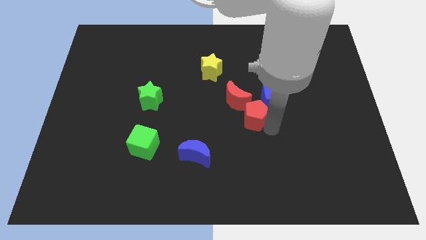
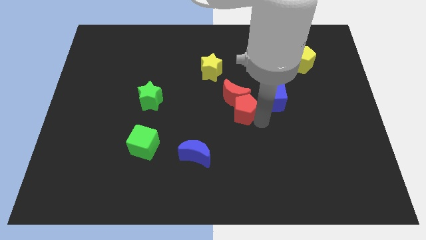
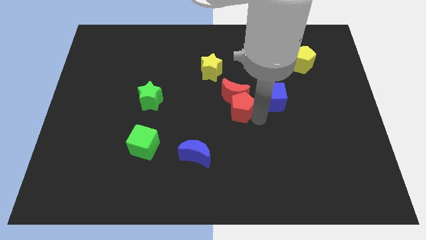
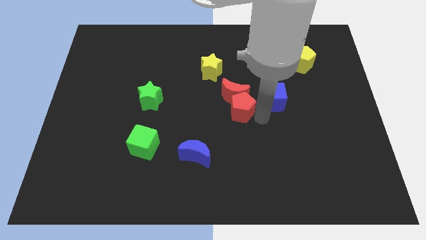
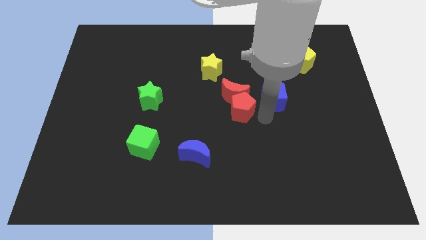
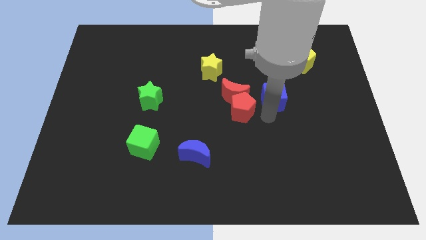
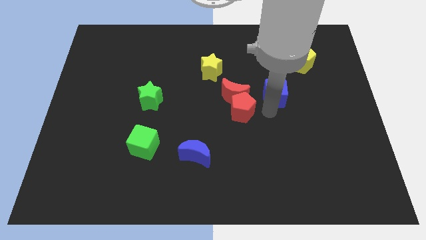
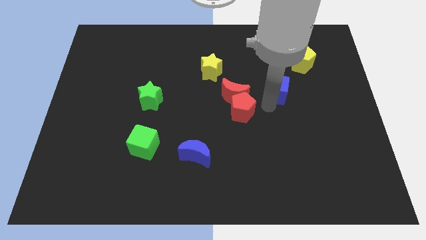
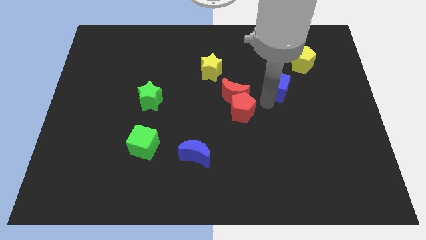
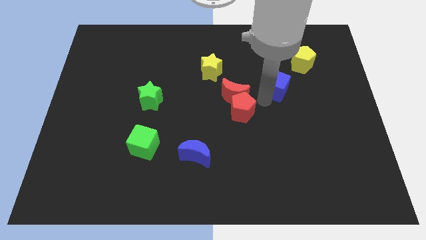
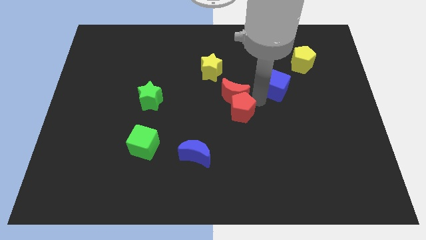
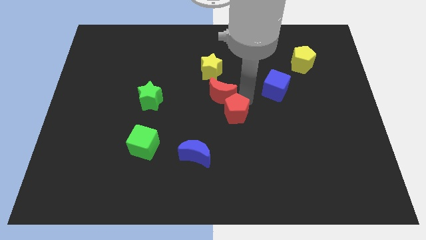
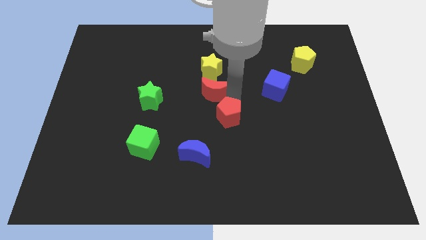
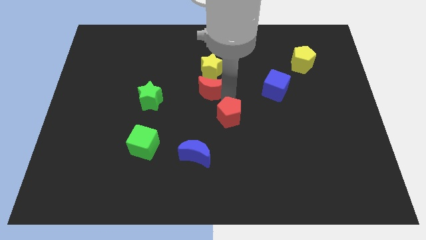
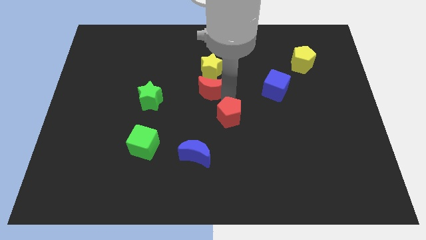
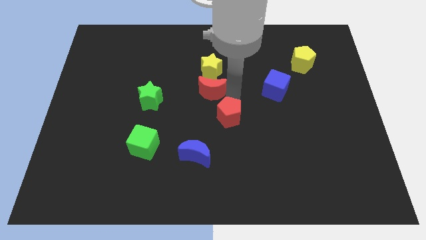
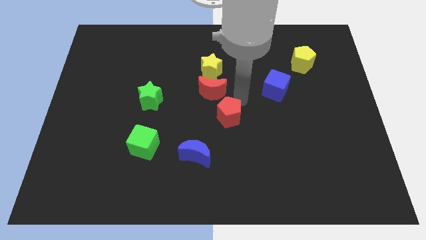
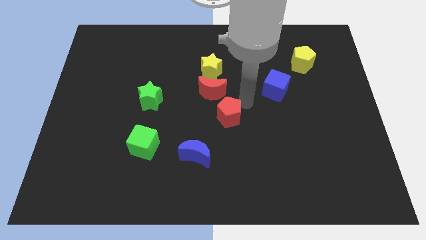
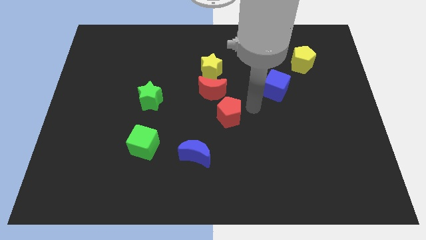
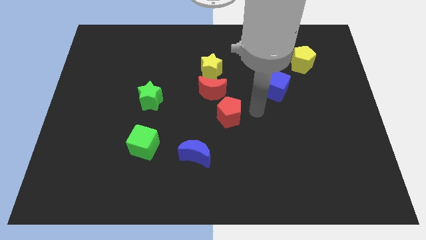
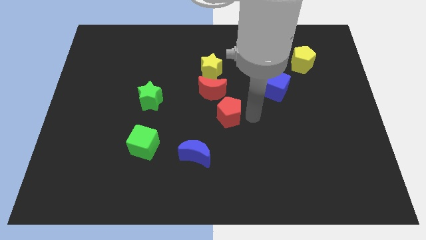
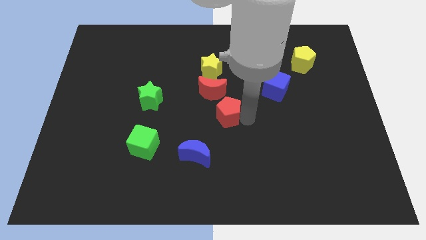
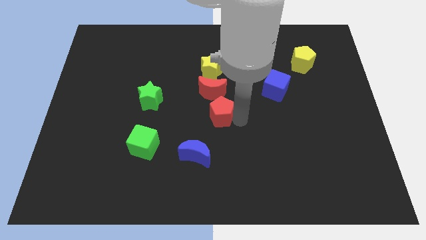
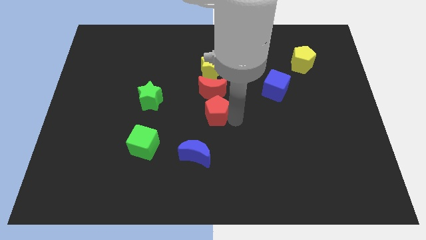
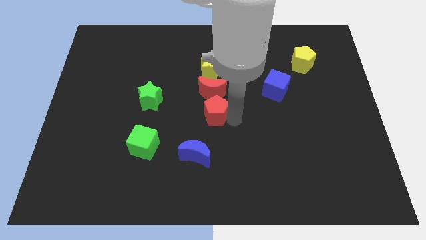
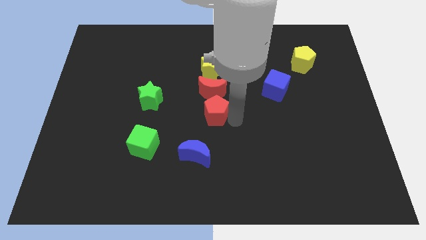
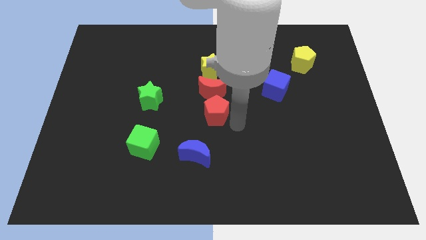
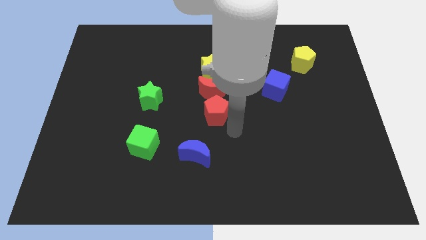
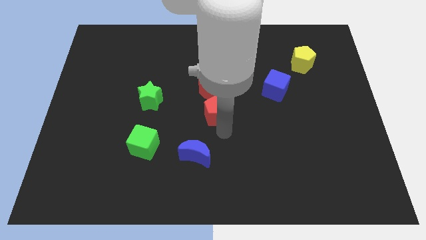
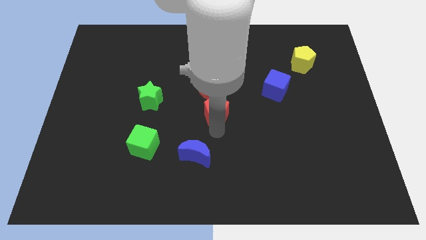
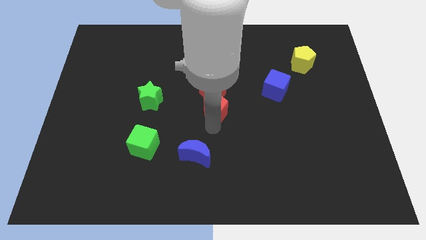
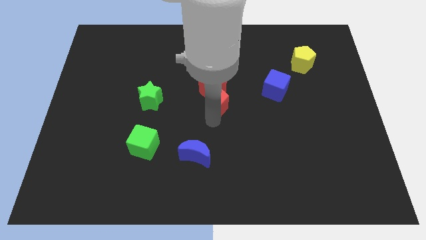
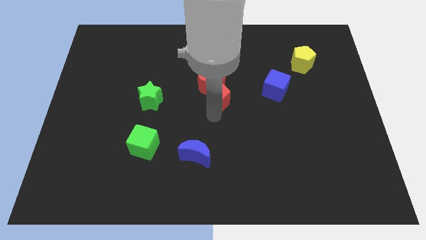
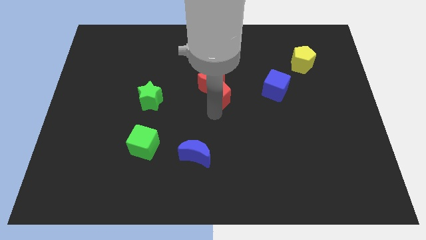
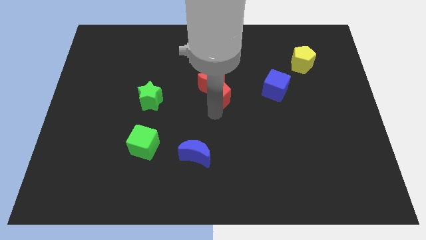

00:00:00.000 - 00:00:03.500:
put the red blocks below the yellow star

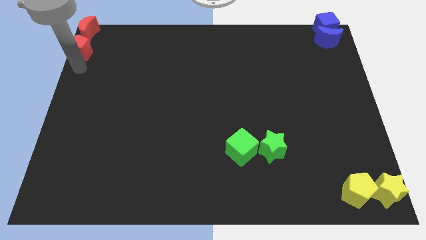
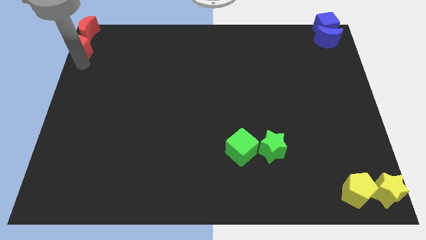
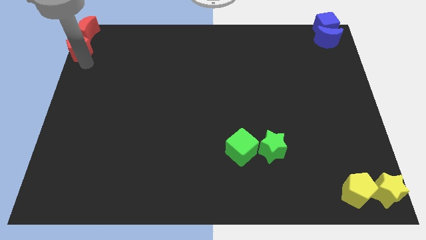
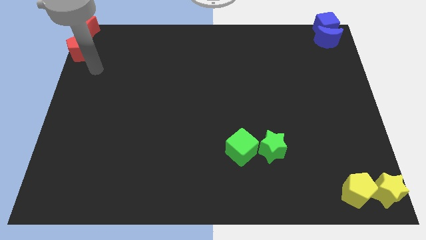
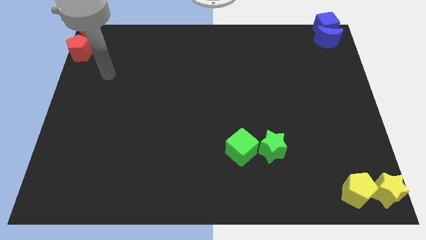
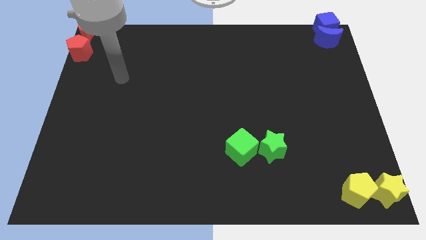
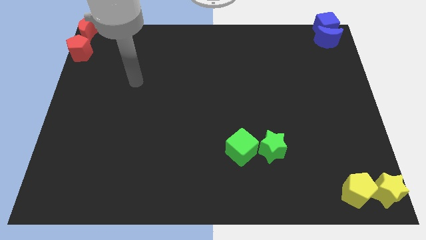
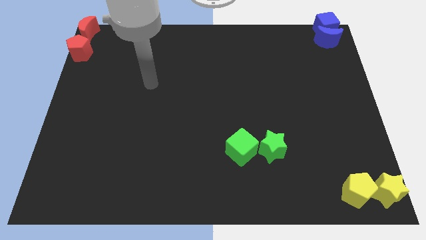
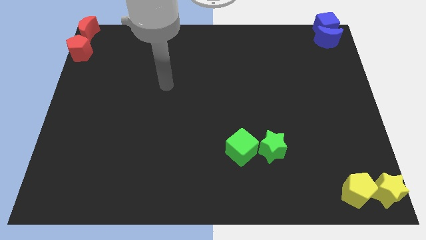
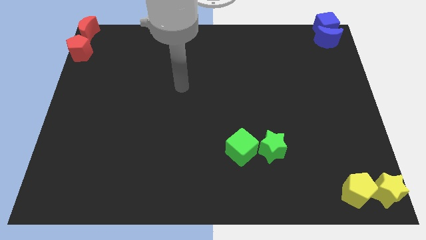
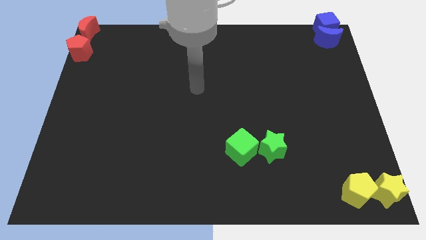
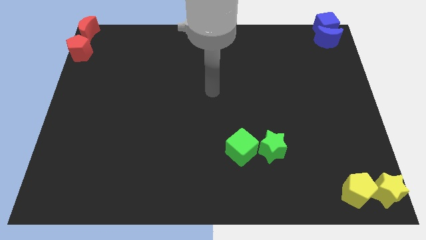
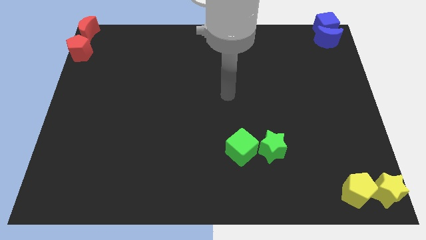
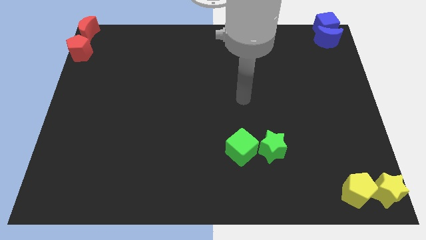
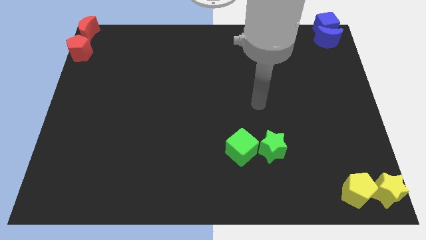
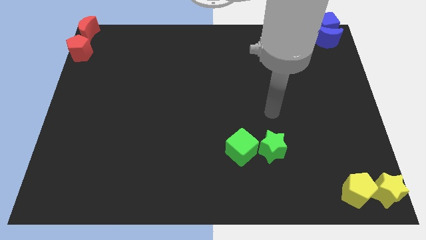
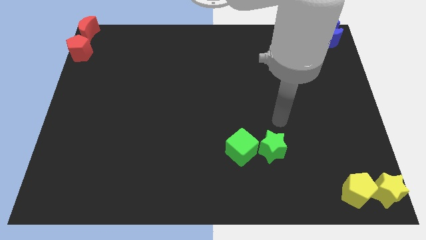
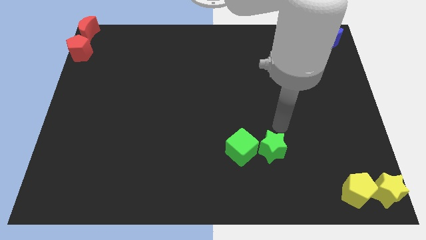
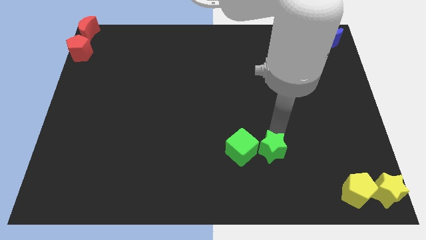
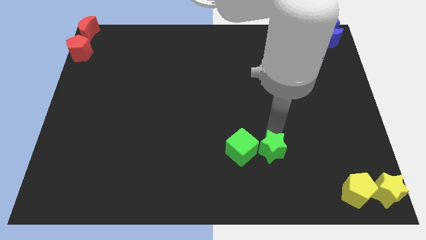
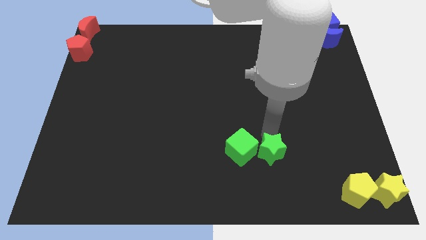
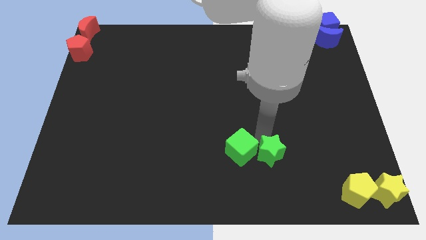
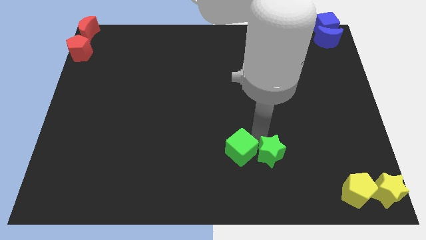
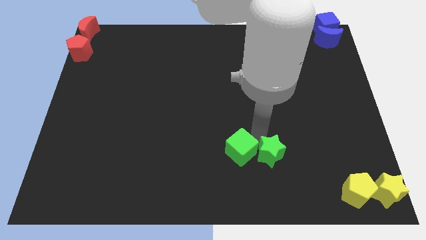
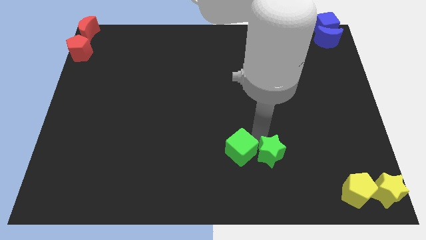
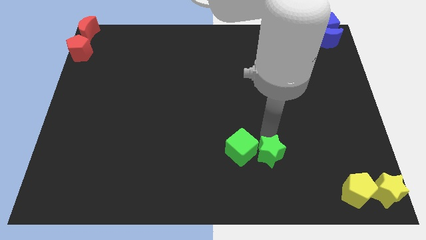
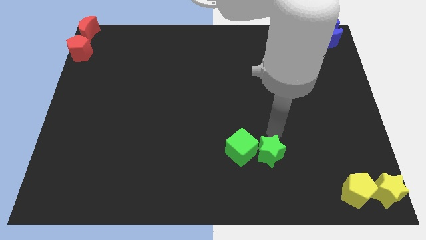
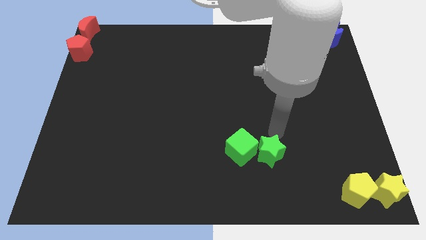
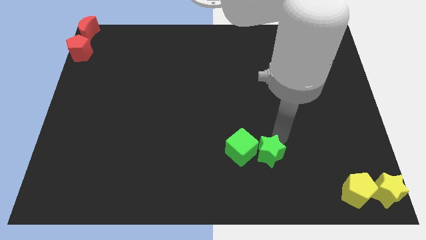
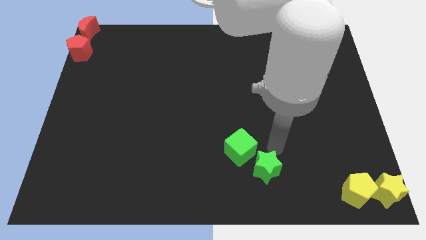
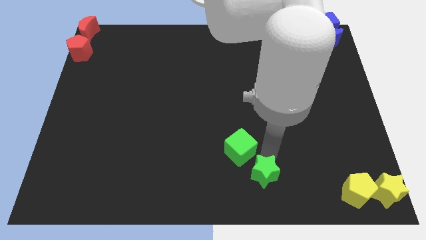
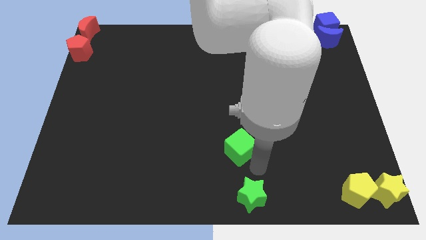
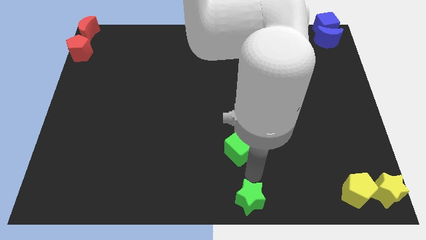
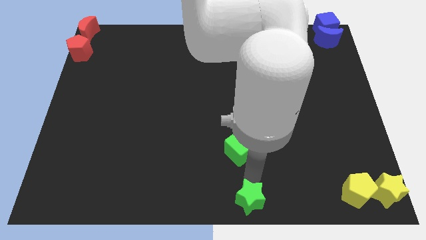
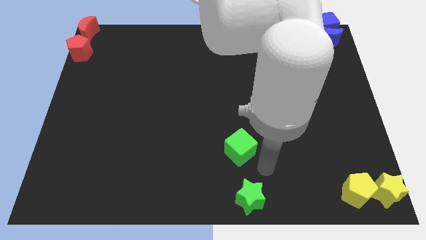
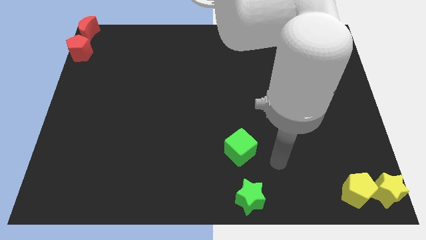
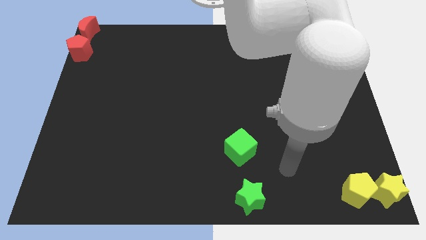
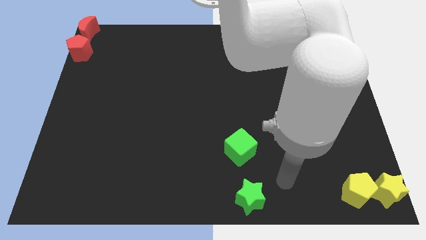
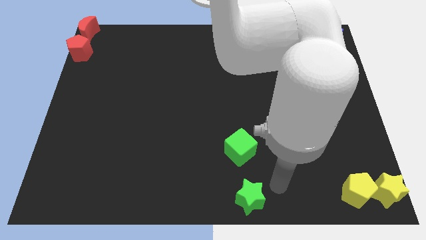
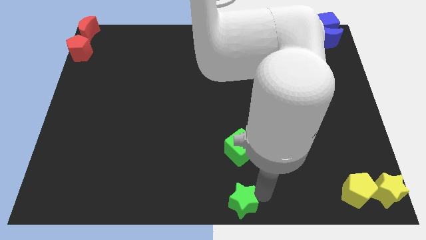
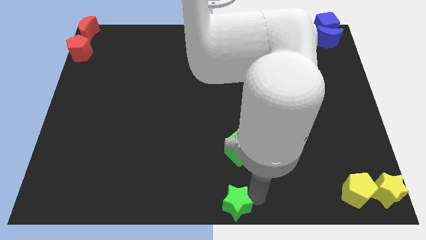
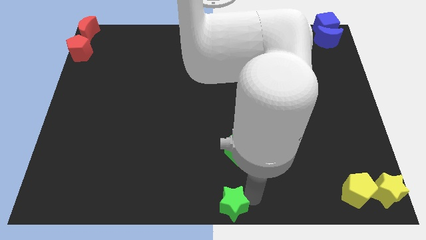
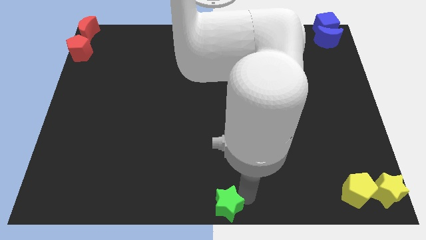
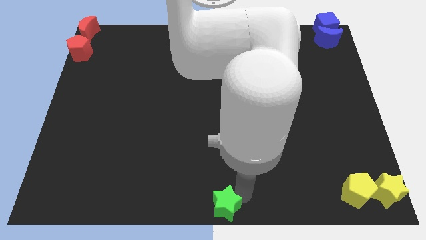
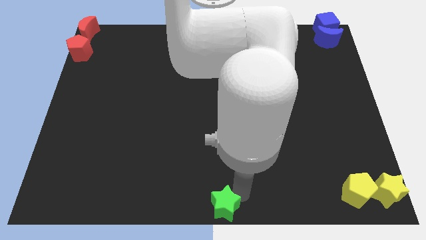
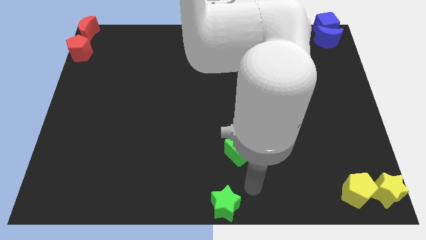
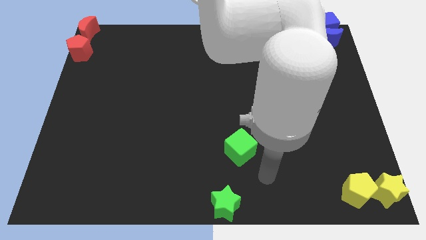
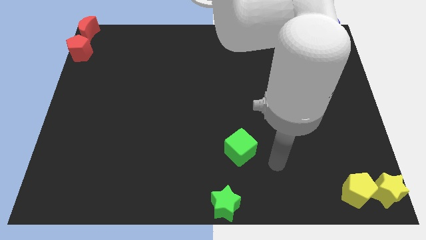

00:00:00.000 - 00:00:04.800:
move the green star towards the bottom center of the board

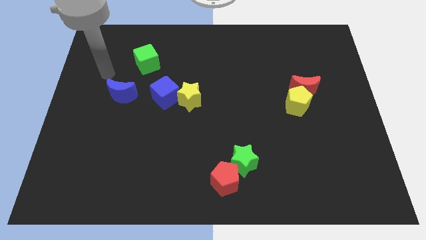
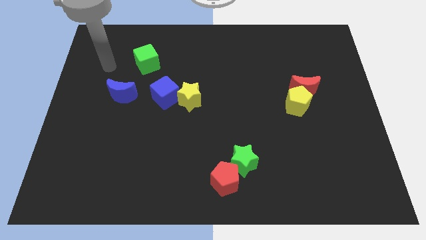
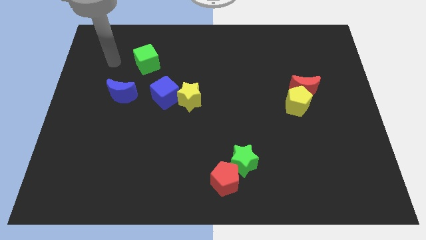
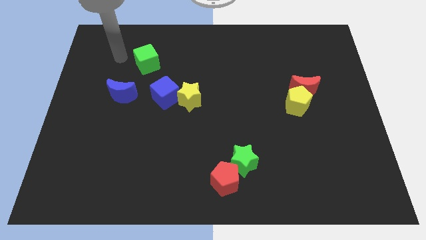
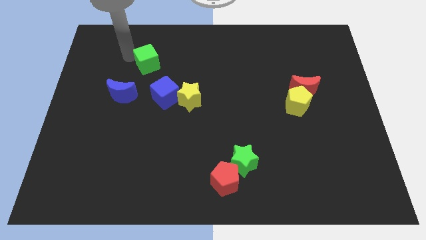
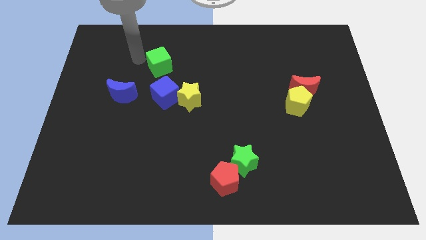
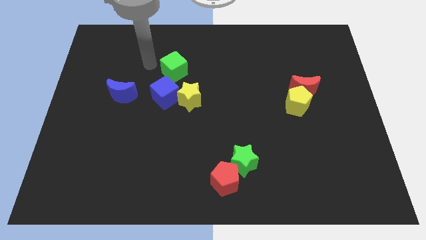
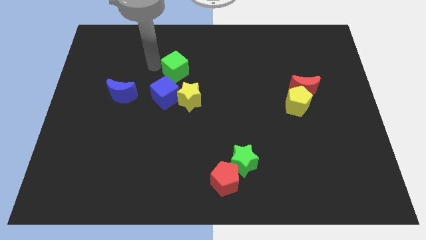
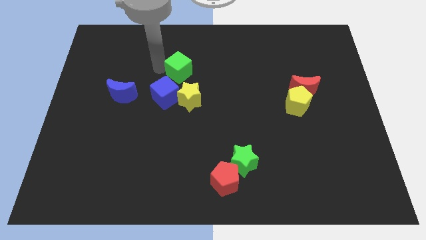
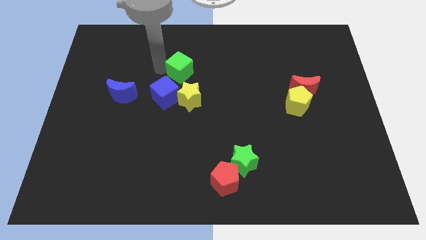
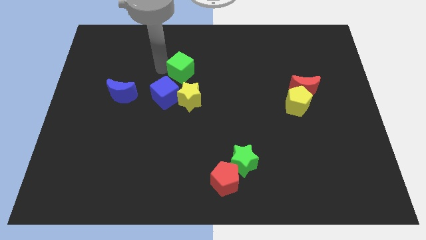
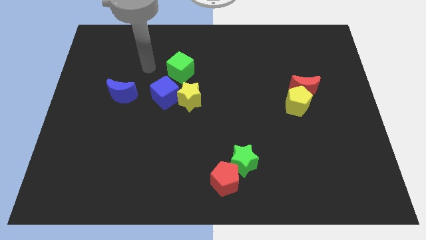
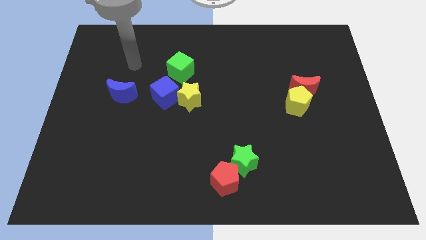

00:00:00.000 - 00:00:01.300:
place the green cube above the yellow star
